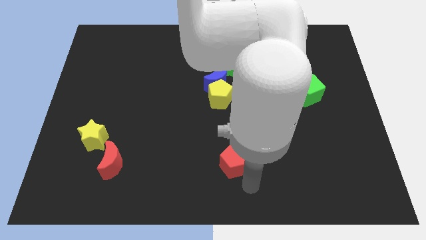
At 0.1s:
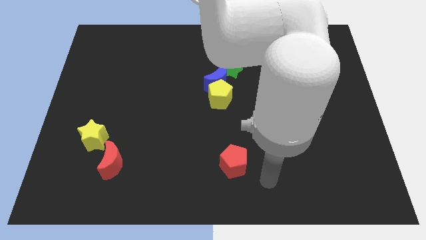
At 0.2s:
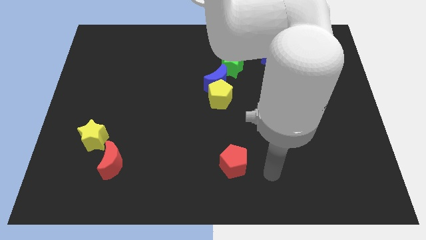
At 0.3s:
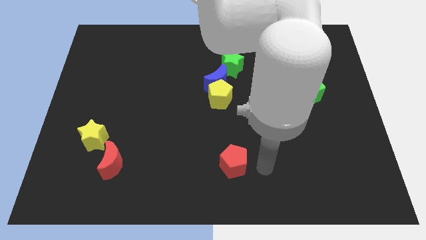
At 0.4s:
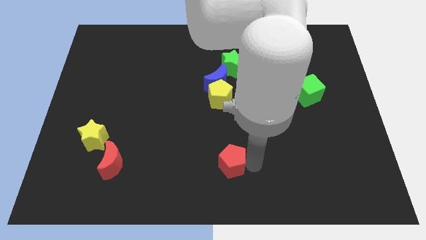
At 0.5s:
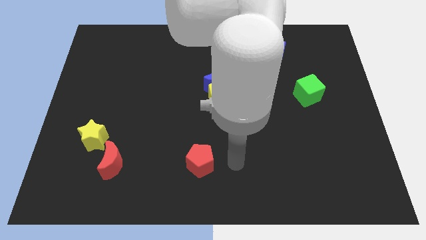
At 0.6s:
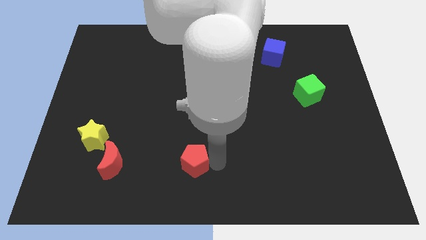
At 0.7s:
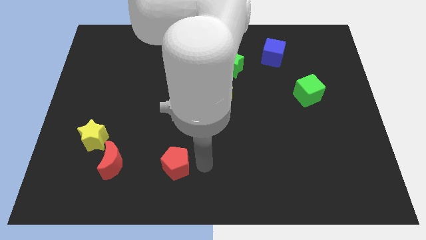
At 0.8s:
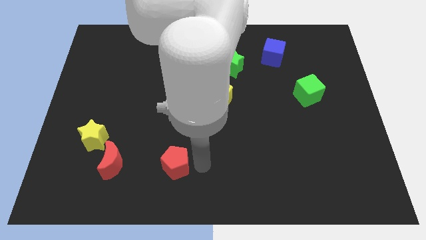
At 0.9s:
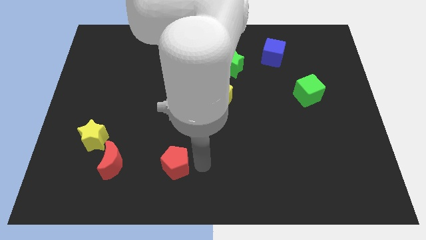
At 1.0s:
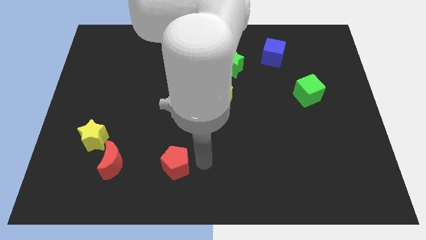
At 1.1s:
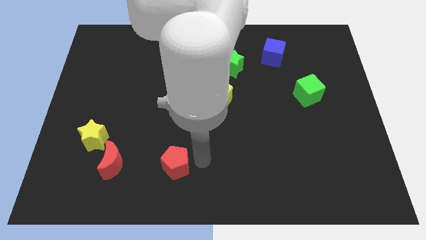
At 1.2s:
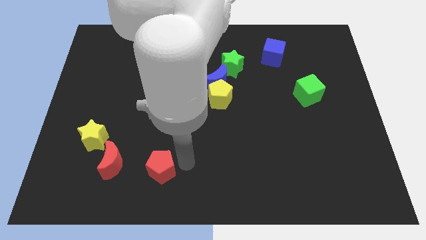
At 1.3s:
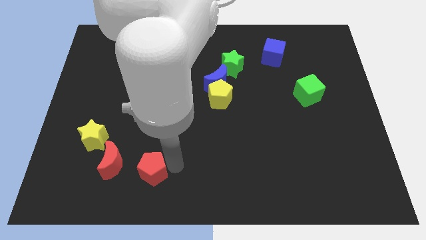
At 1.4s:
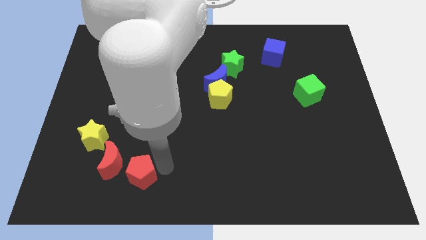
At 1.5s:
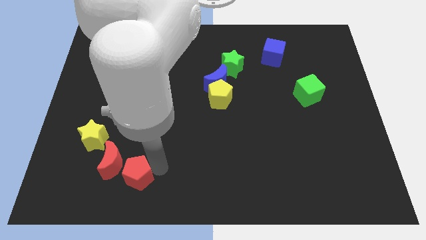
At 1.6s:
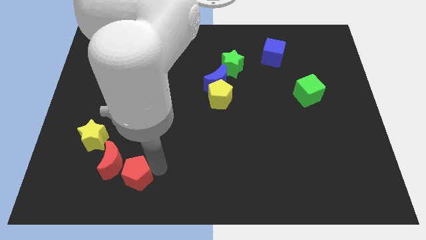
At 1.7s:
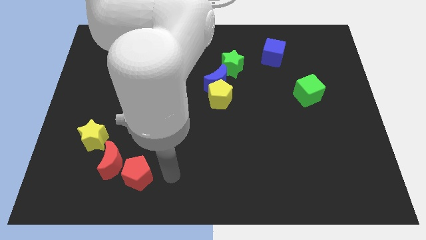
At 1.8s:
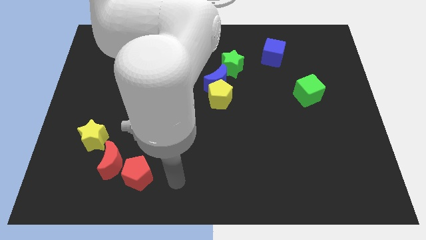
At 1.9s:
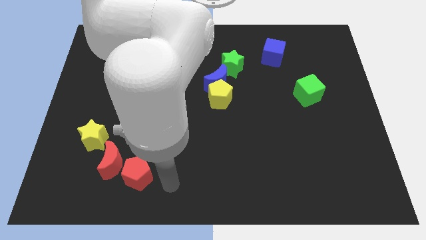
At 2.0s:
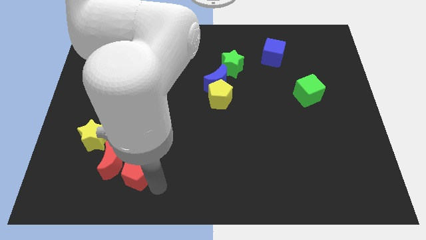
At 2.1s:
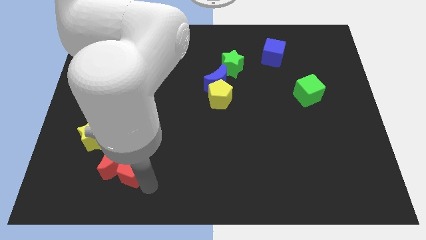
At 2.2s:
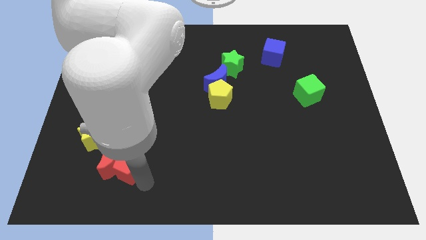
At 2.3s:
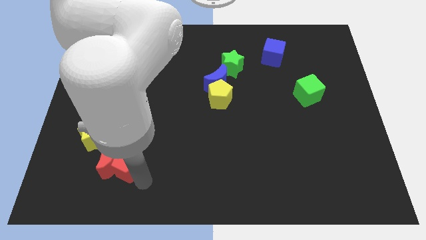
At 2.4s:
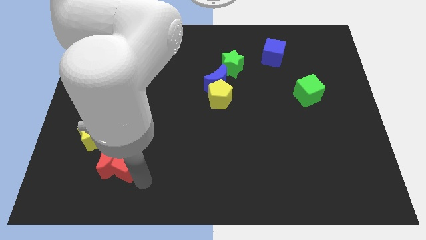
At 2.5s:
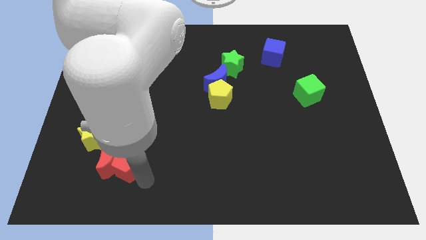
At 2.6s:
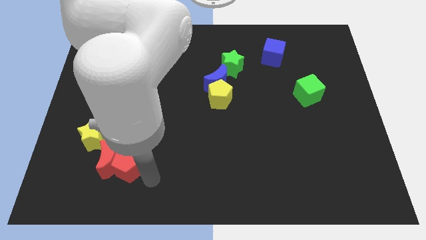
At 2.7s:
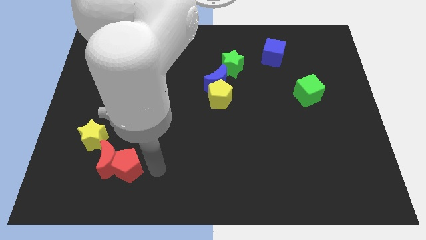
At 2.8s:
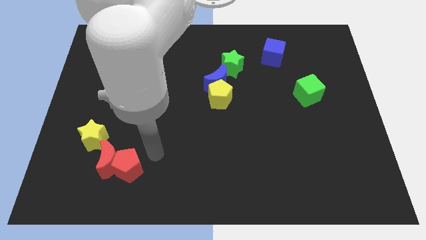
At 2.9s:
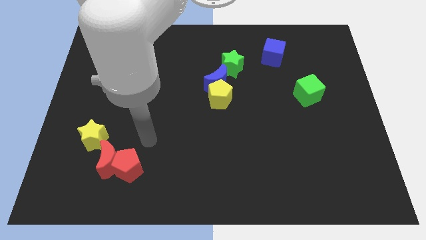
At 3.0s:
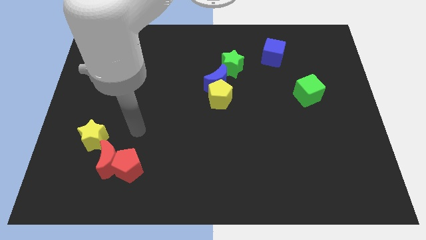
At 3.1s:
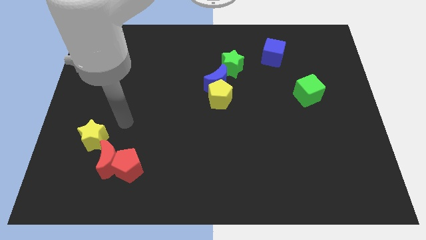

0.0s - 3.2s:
push the red pentagon to the right of the red moon

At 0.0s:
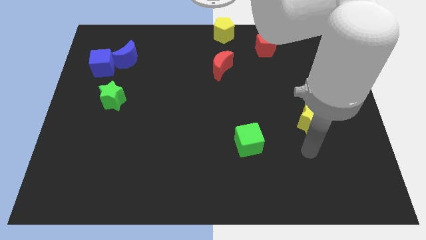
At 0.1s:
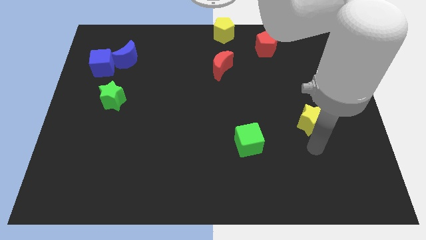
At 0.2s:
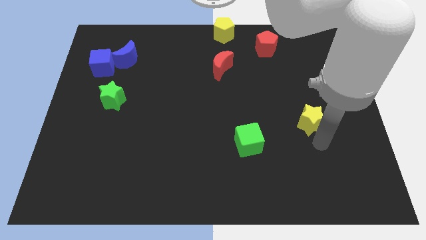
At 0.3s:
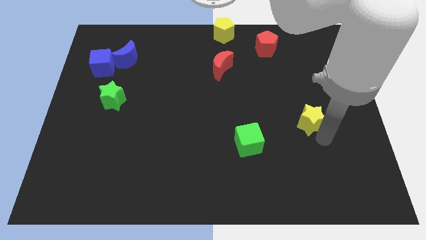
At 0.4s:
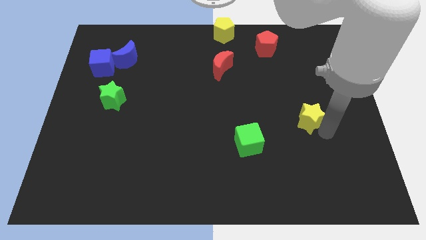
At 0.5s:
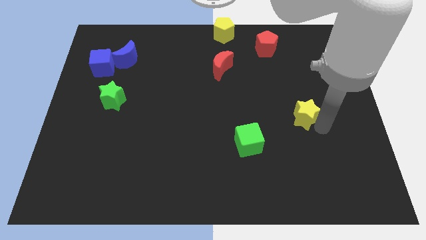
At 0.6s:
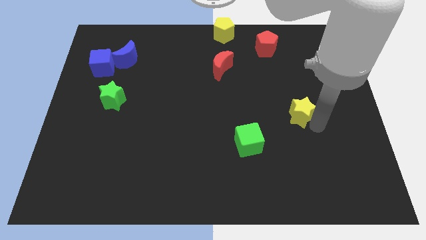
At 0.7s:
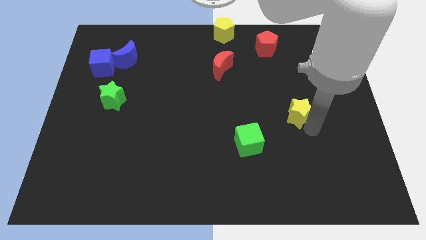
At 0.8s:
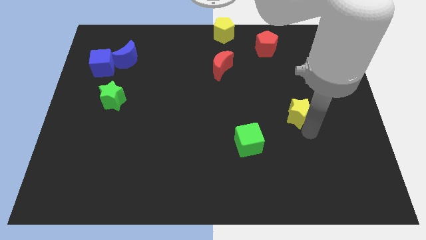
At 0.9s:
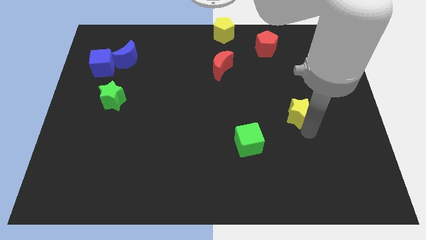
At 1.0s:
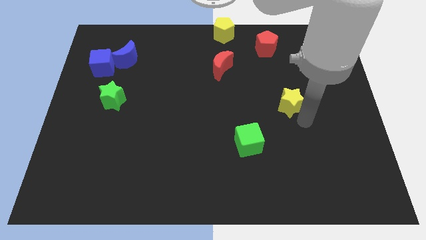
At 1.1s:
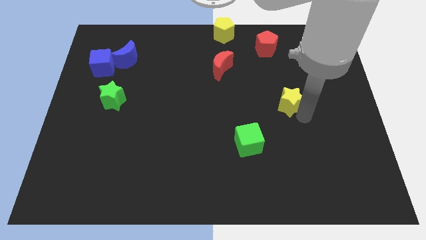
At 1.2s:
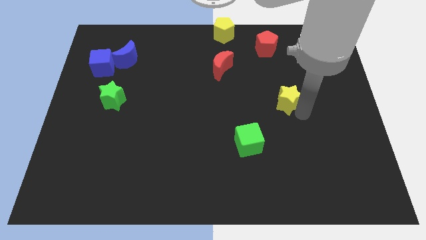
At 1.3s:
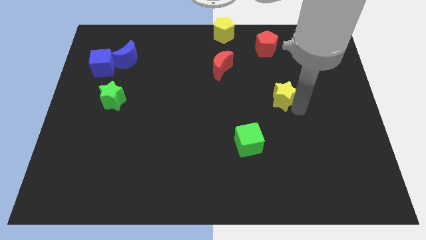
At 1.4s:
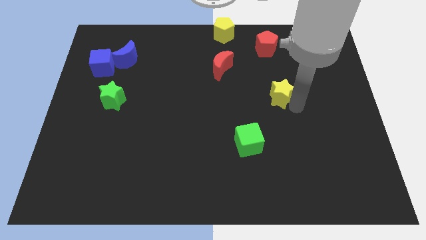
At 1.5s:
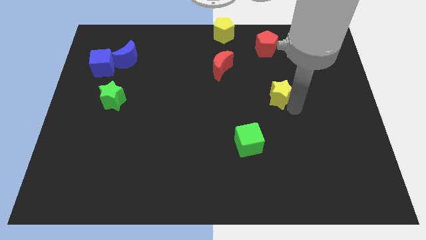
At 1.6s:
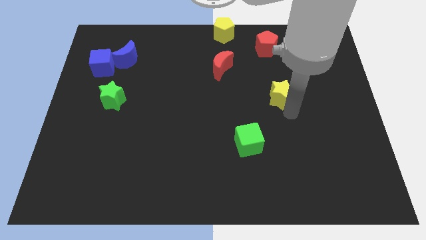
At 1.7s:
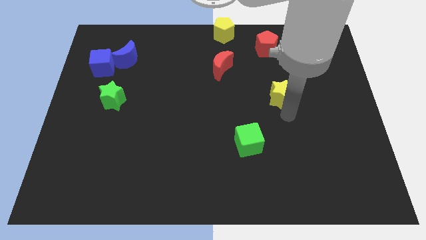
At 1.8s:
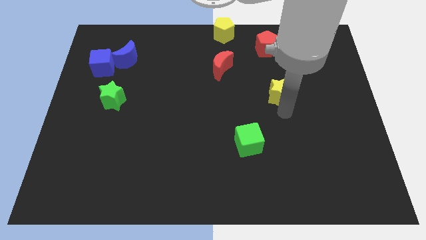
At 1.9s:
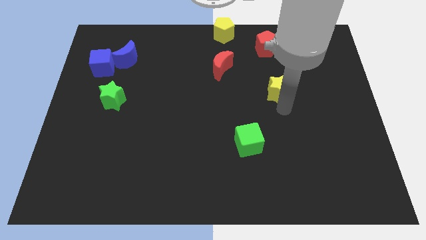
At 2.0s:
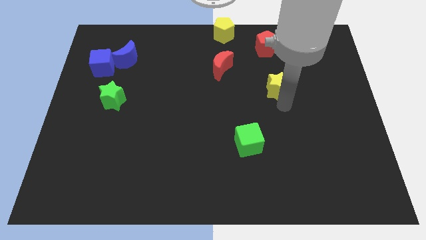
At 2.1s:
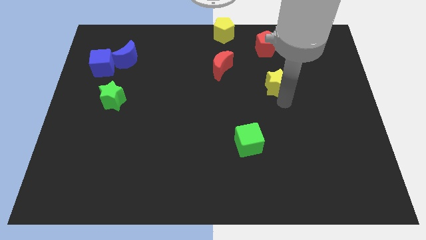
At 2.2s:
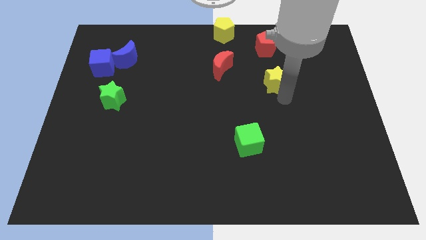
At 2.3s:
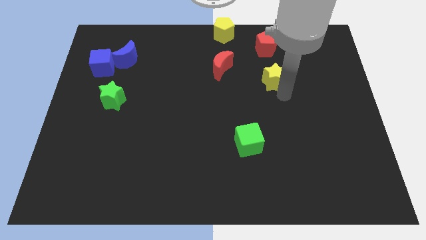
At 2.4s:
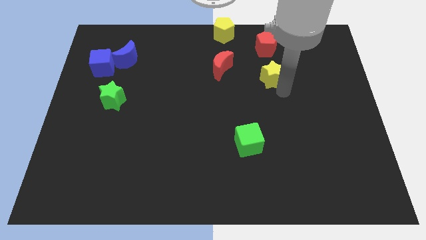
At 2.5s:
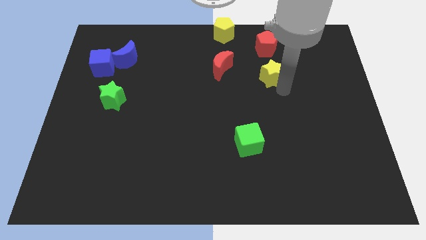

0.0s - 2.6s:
place yellow start below red pentagon

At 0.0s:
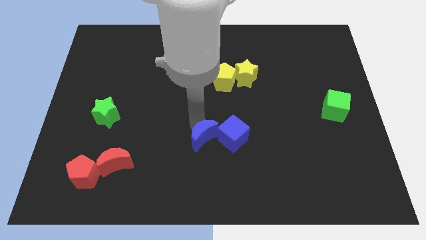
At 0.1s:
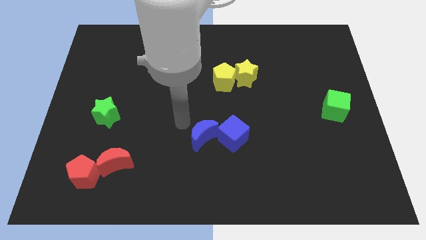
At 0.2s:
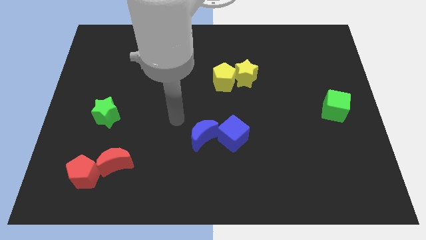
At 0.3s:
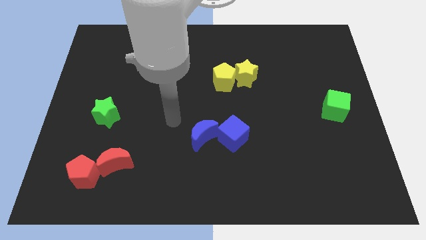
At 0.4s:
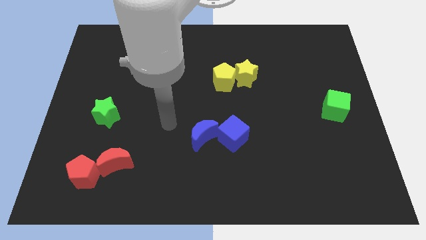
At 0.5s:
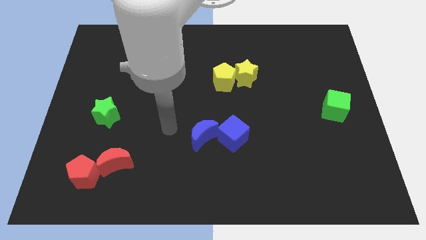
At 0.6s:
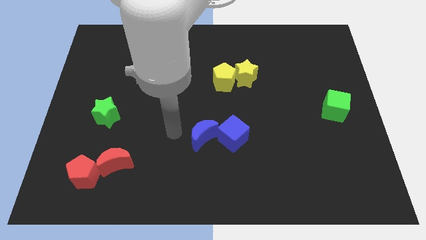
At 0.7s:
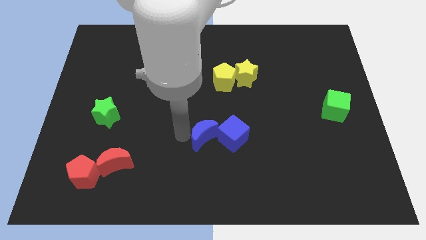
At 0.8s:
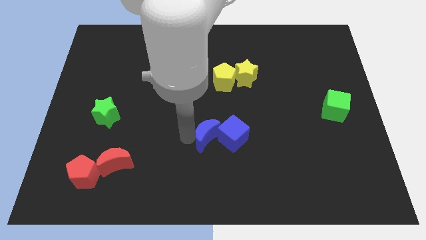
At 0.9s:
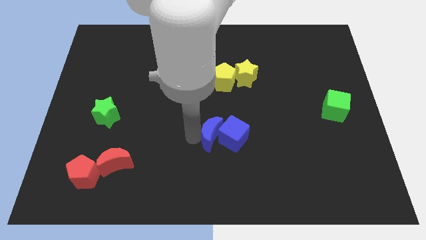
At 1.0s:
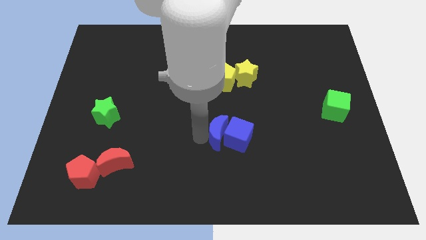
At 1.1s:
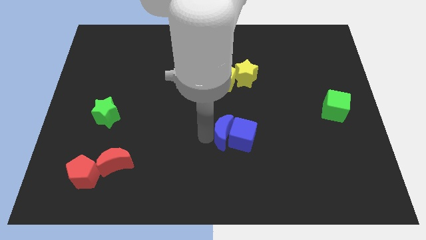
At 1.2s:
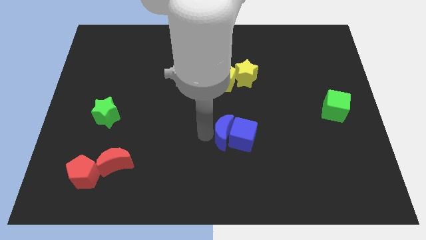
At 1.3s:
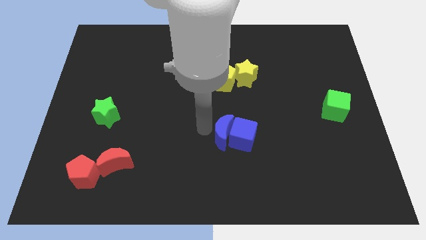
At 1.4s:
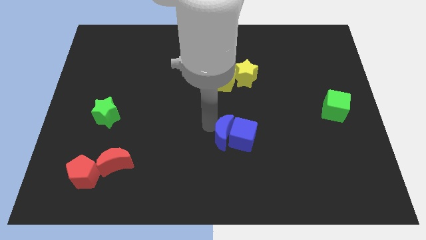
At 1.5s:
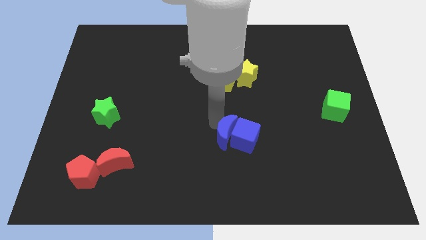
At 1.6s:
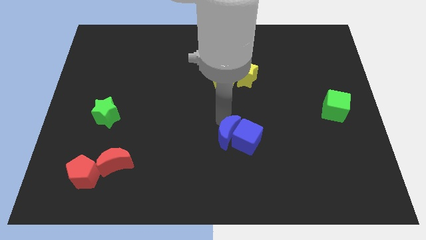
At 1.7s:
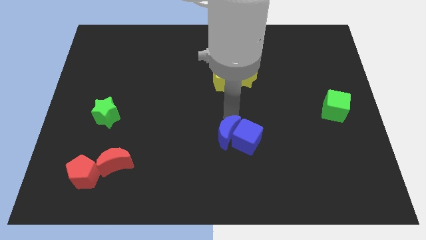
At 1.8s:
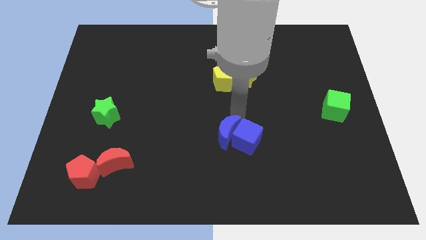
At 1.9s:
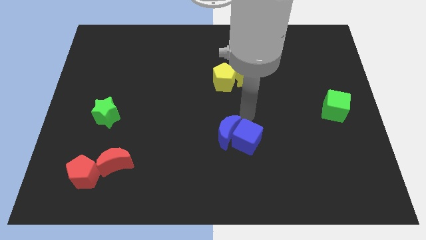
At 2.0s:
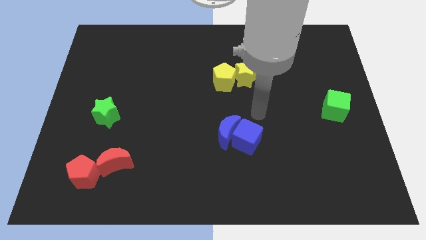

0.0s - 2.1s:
push the blue moon into blue cube below yellow blocks

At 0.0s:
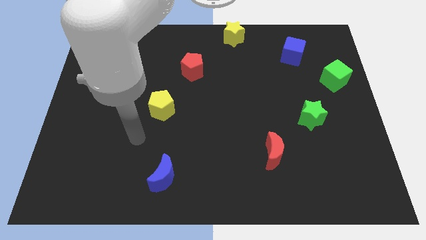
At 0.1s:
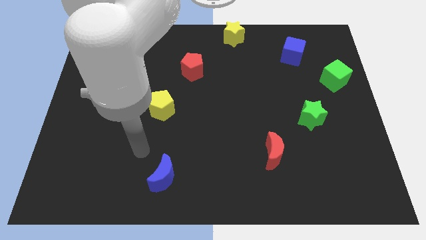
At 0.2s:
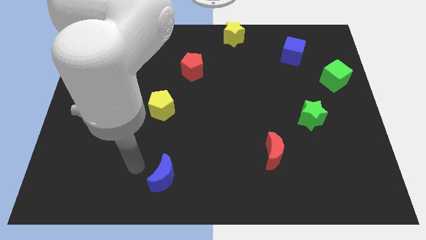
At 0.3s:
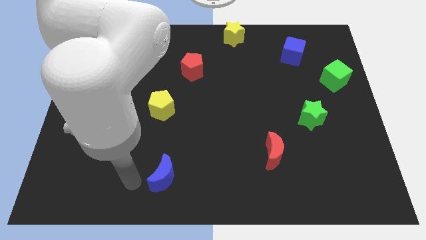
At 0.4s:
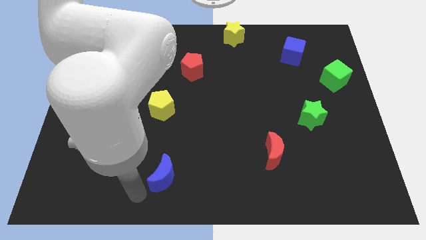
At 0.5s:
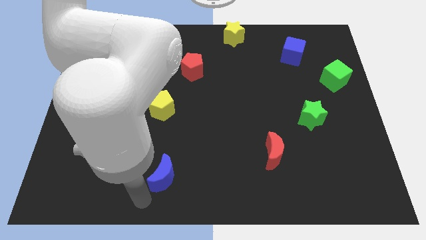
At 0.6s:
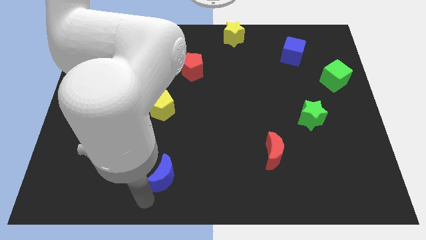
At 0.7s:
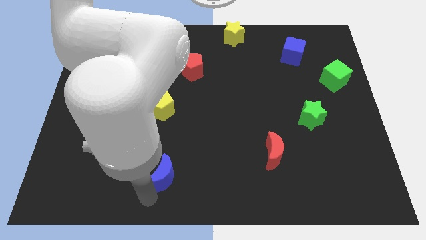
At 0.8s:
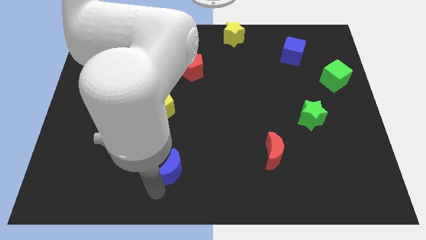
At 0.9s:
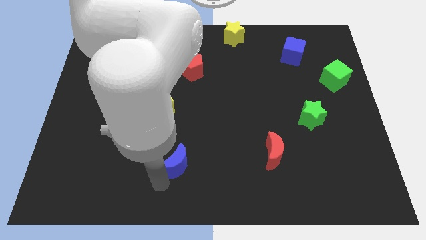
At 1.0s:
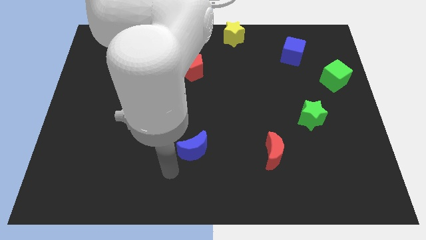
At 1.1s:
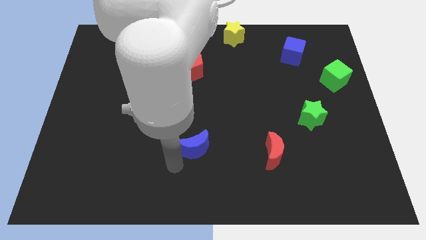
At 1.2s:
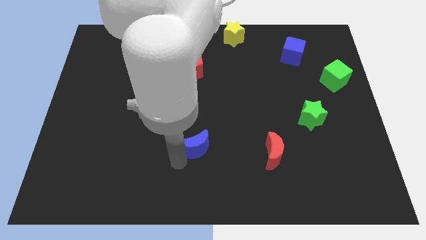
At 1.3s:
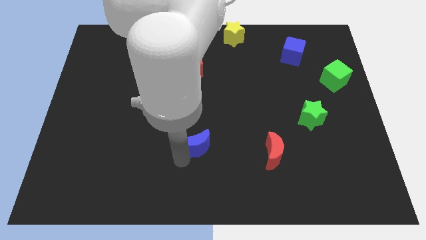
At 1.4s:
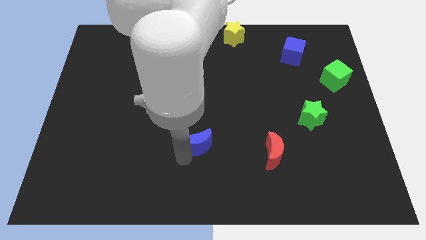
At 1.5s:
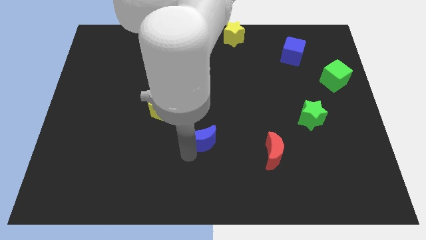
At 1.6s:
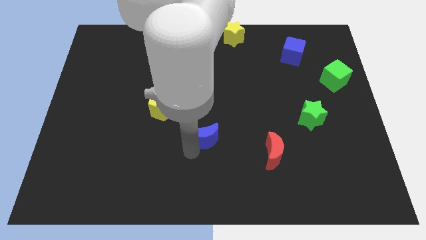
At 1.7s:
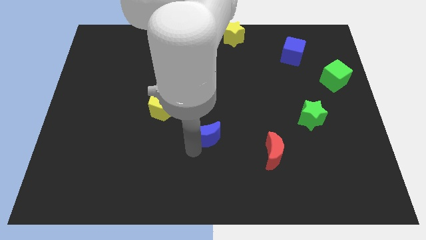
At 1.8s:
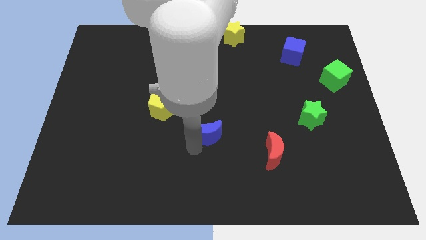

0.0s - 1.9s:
place the blue moon between the red moon and yellow pentagon
